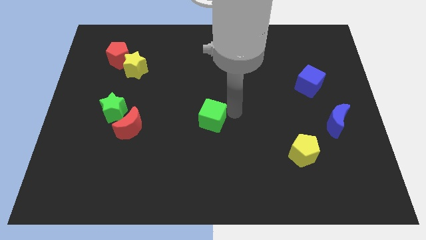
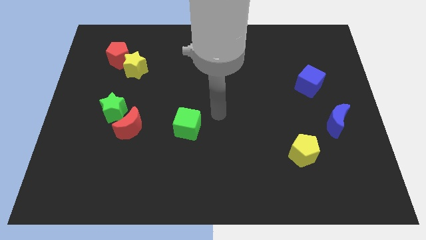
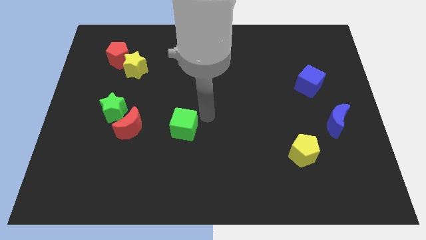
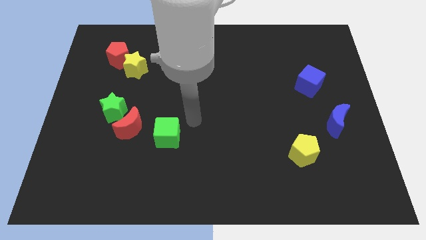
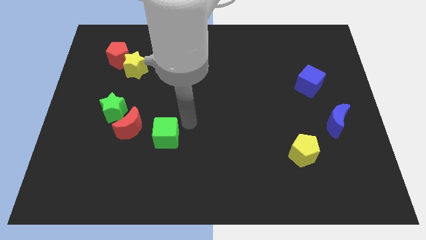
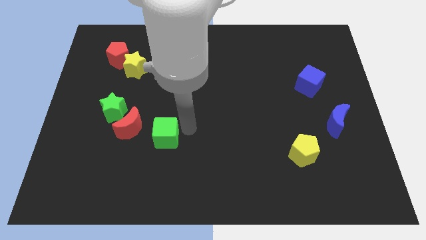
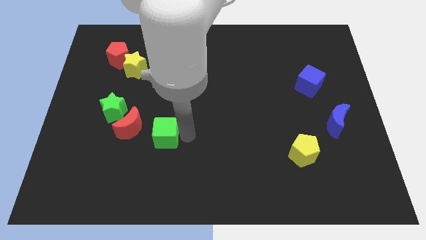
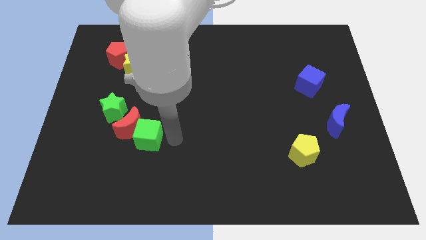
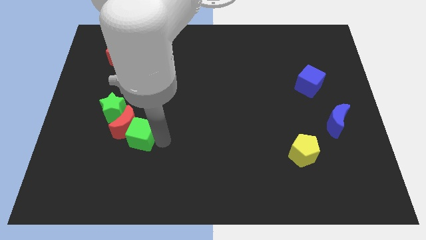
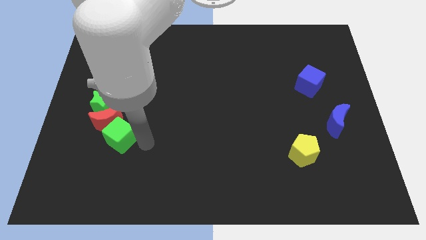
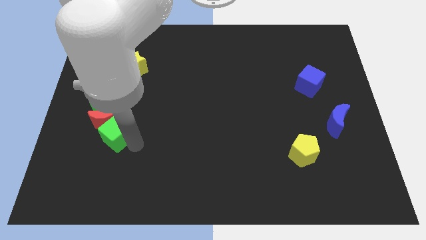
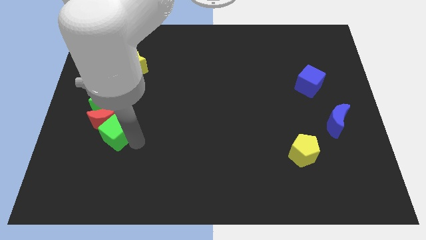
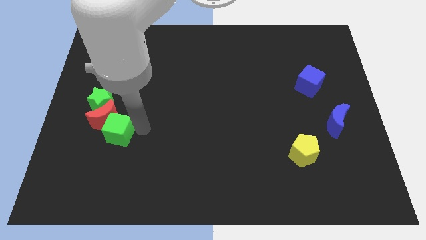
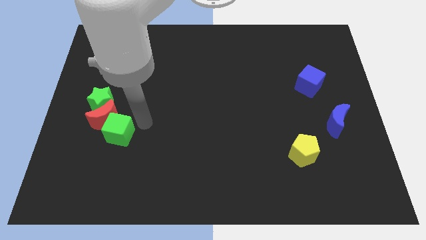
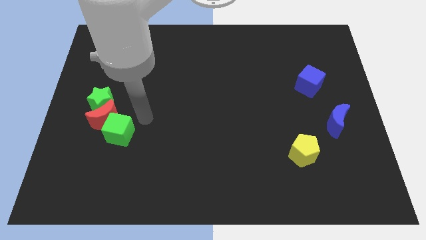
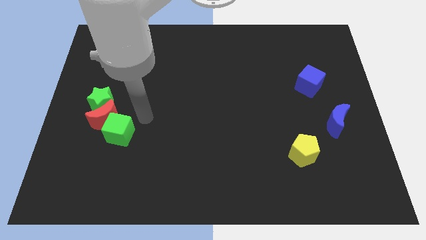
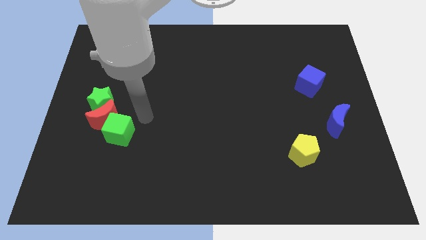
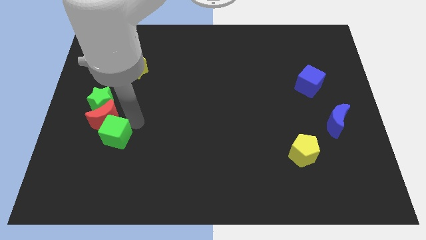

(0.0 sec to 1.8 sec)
push the green cube into the red crescent

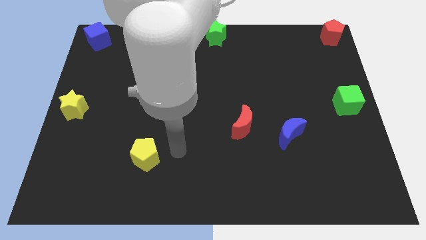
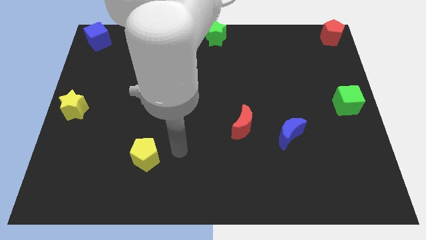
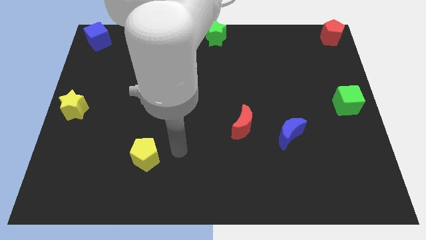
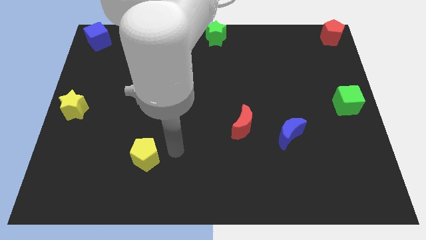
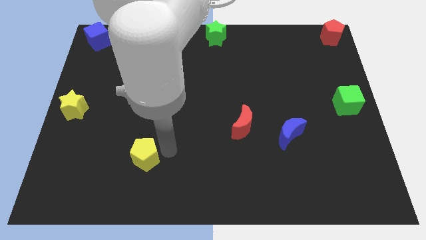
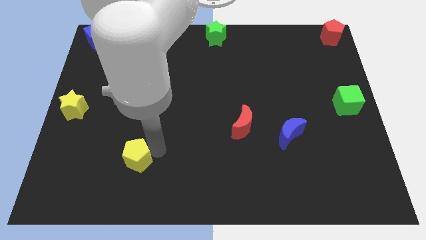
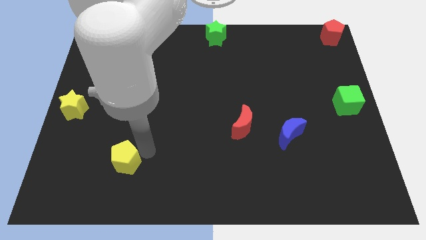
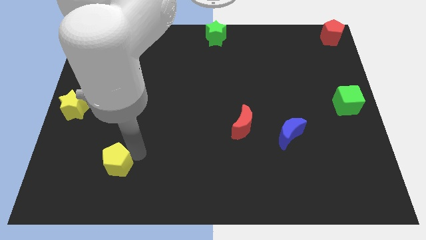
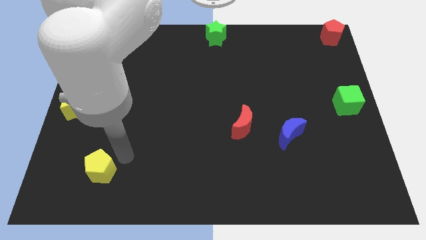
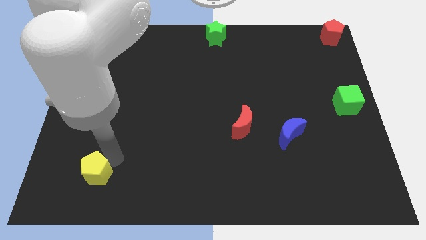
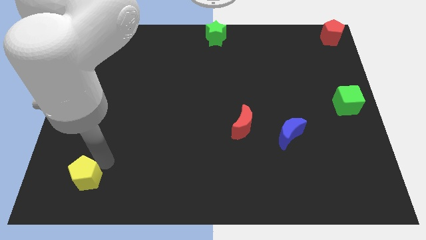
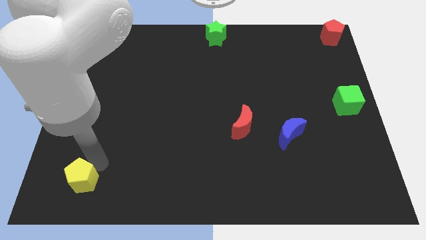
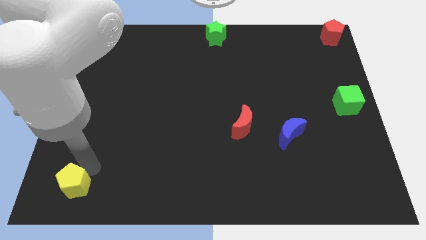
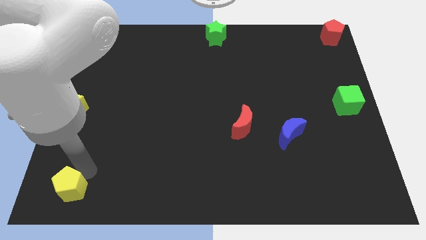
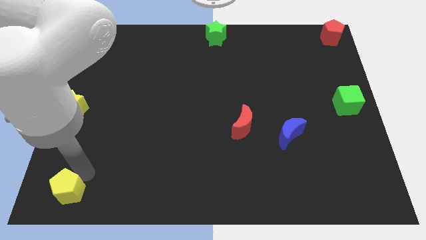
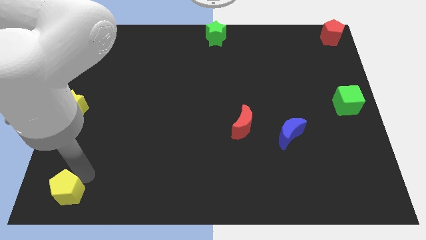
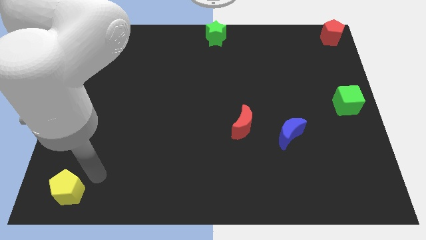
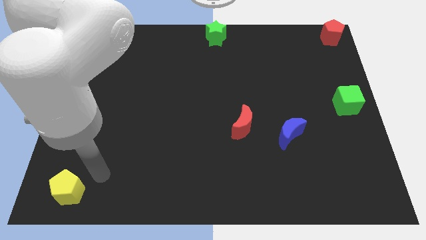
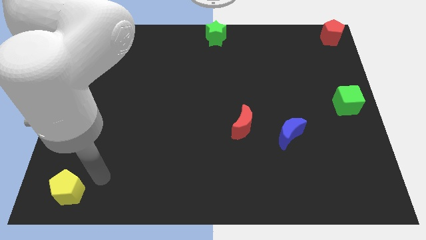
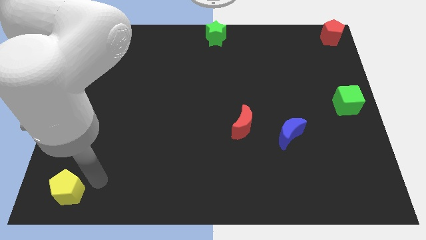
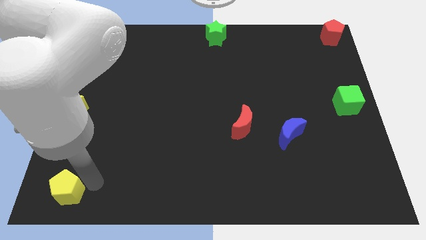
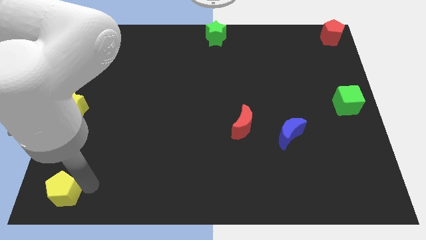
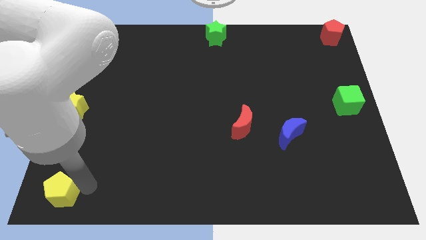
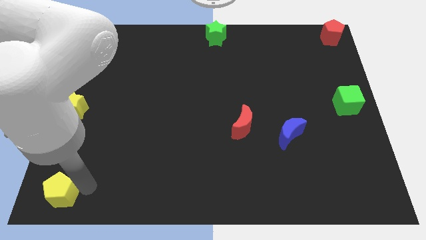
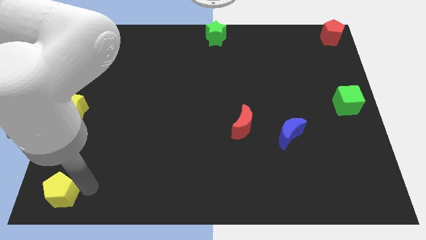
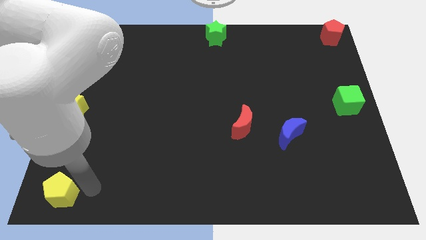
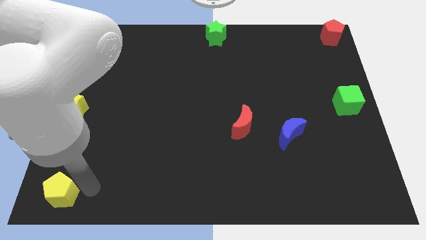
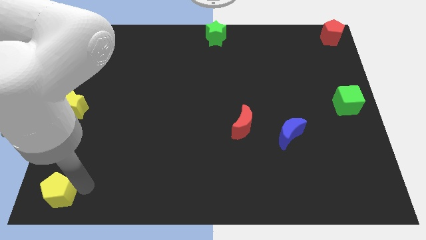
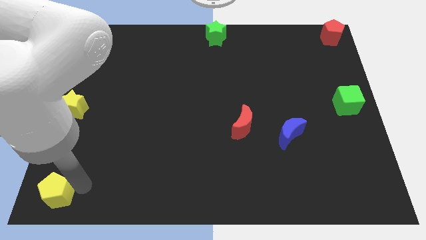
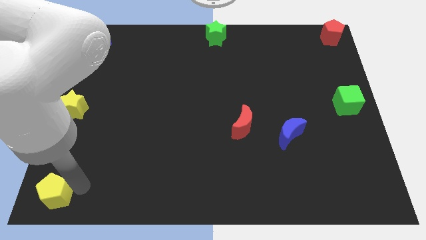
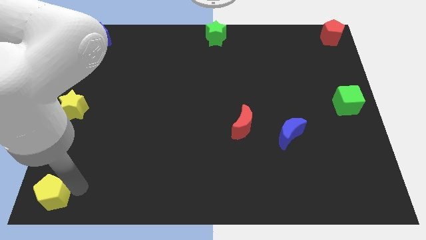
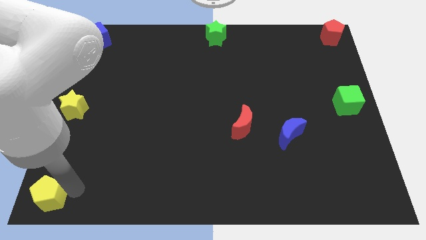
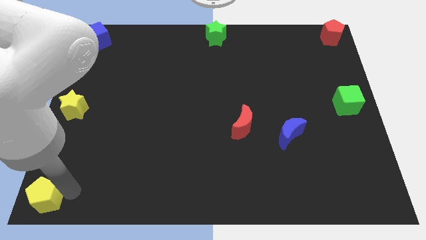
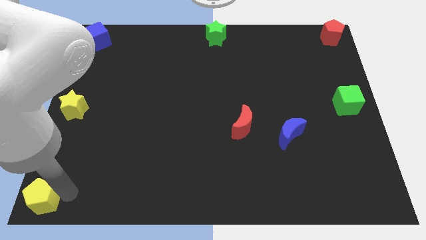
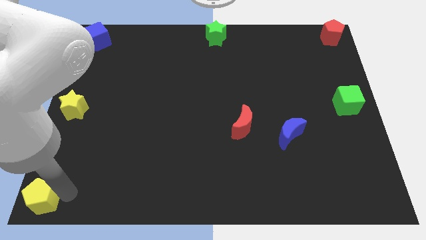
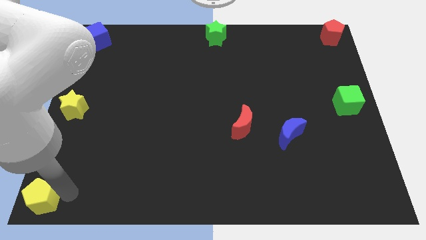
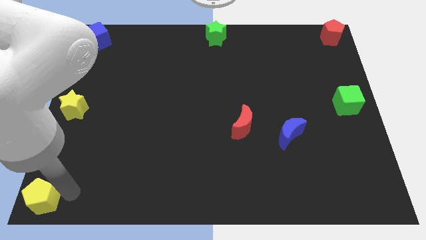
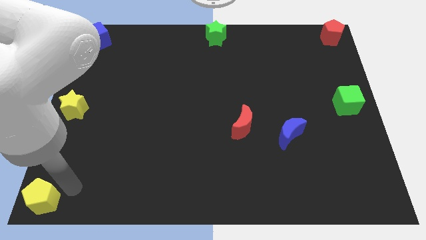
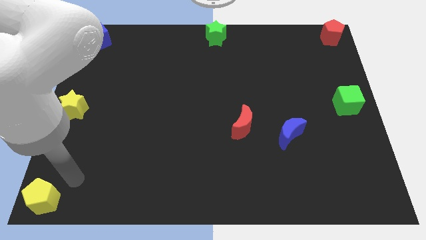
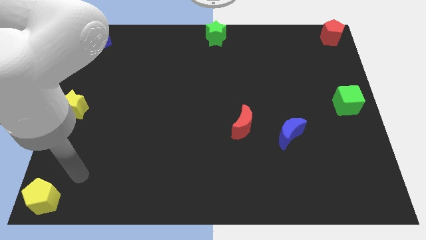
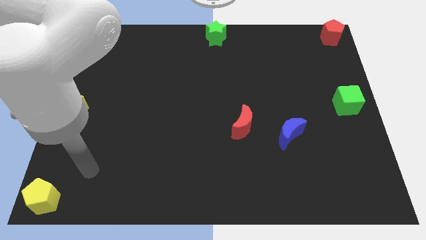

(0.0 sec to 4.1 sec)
move the yellow pentagon to the bottom left corner of the board

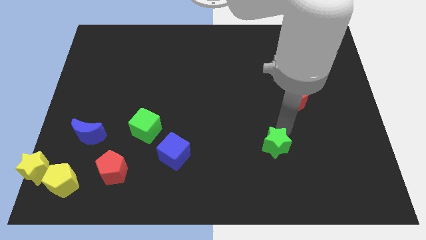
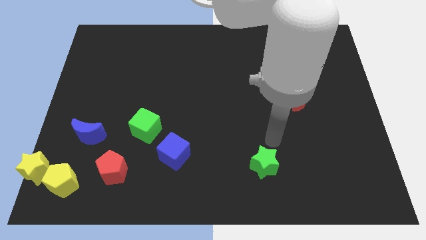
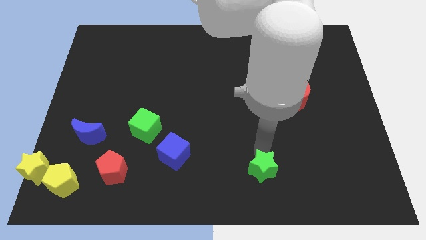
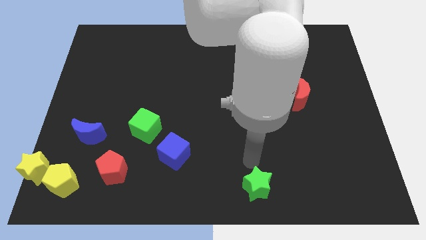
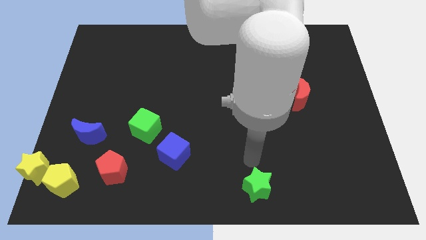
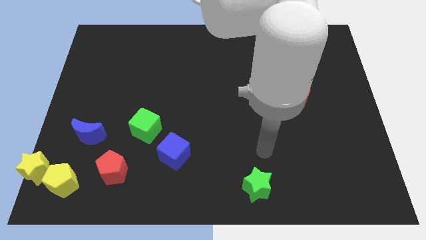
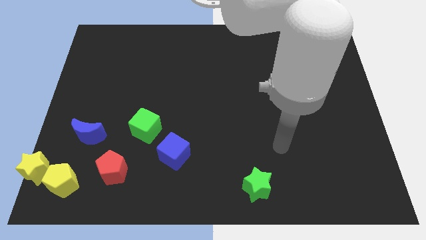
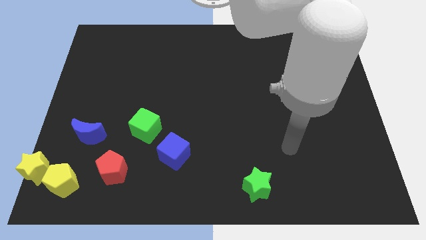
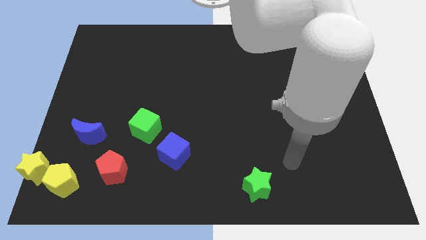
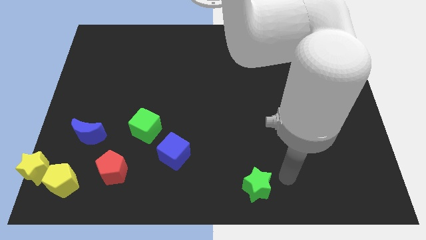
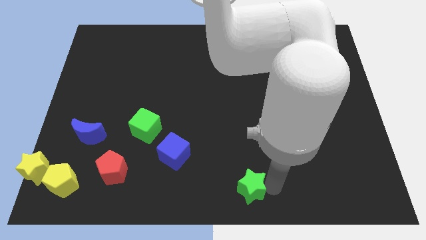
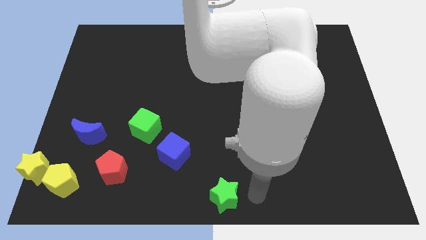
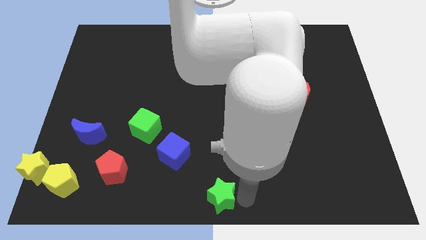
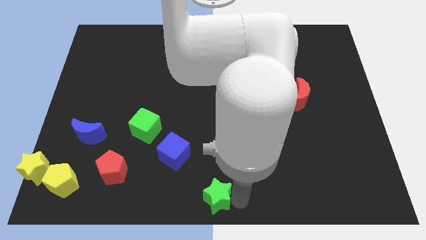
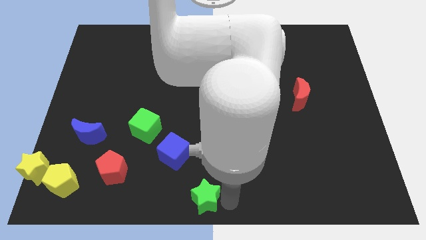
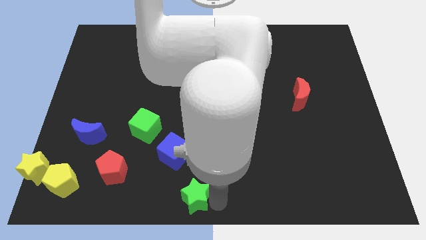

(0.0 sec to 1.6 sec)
slide the green star to the bottom center of the board

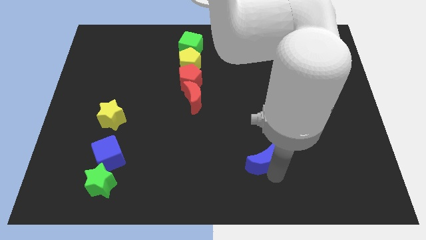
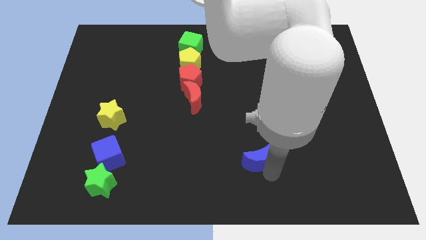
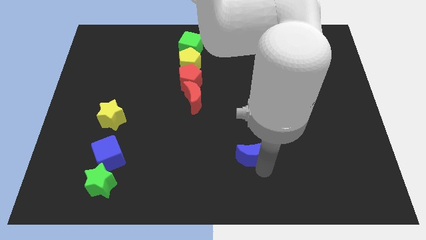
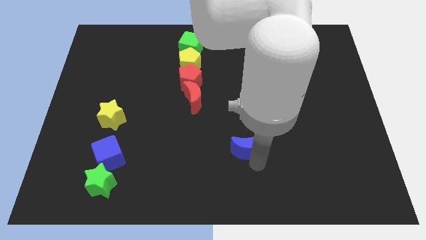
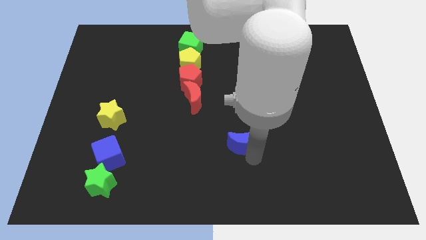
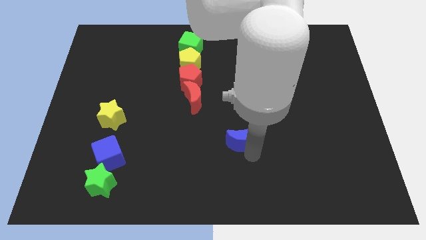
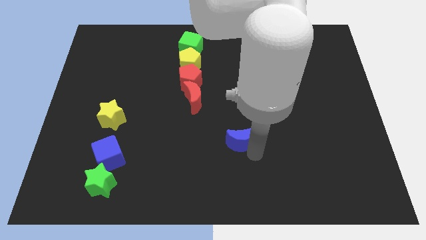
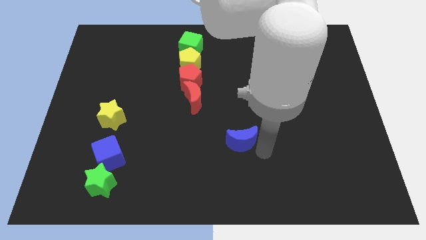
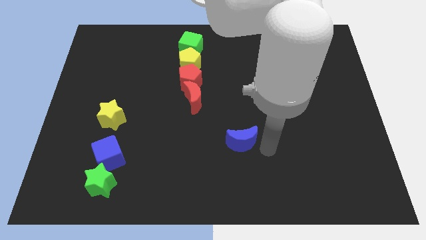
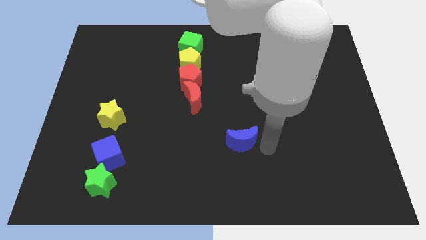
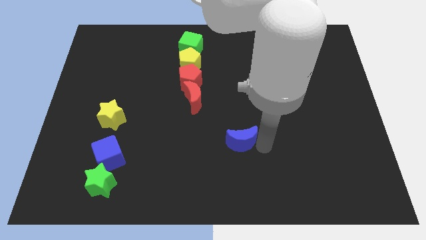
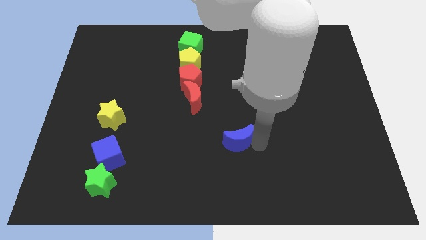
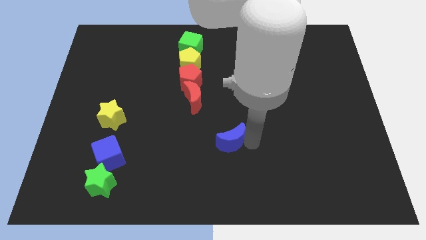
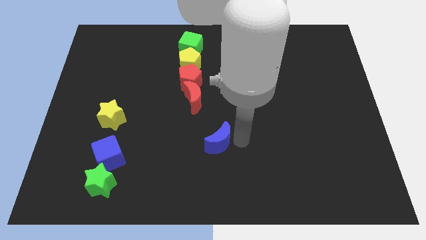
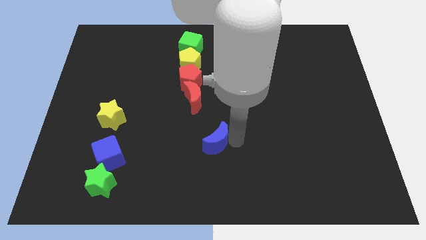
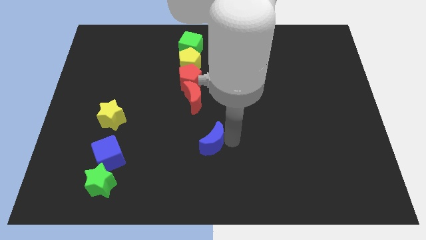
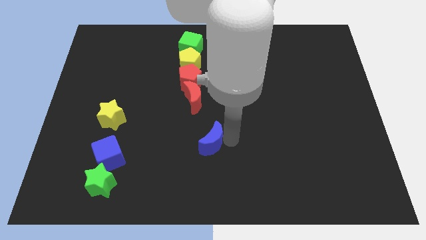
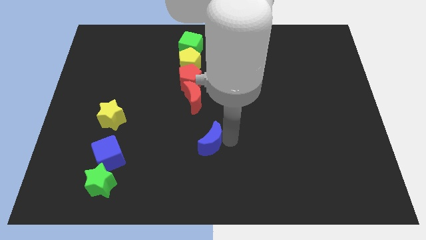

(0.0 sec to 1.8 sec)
move blue moon to the bottom of red moon
